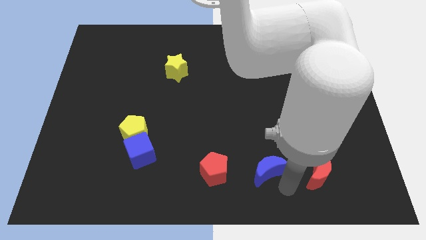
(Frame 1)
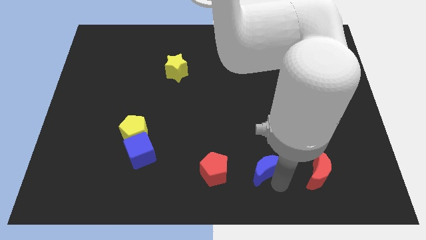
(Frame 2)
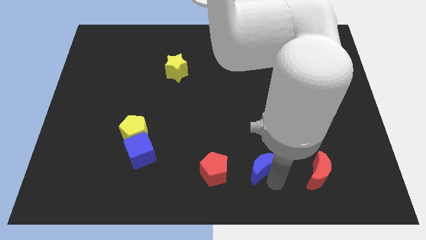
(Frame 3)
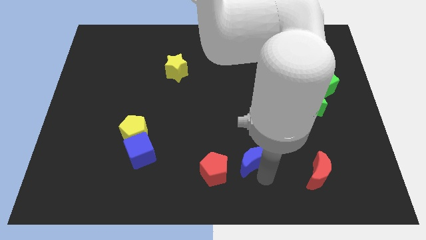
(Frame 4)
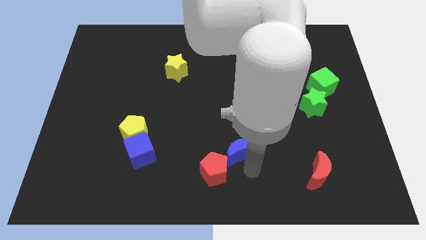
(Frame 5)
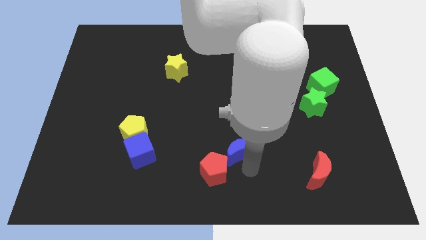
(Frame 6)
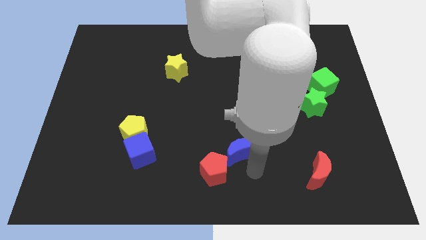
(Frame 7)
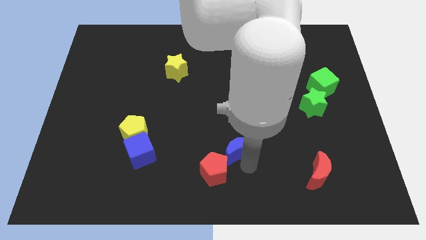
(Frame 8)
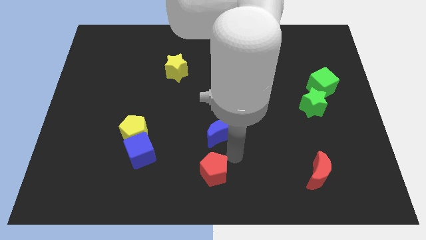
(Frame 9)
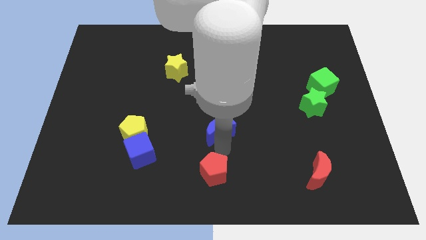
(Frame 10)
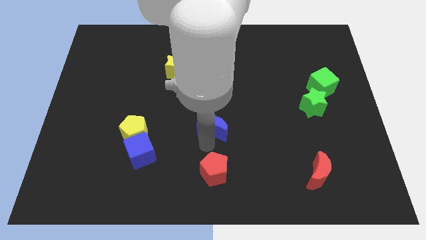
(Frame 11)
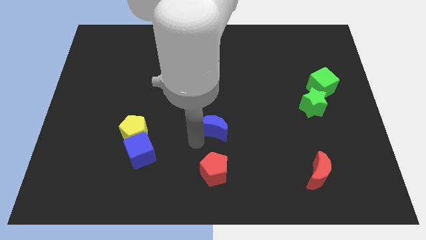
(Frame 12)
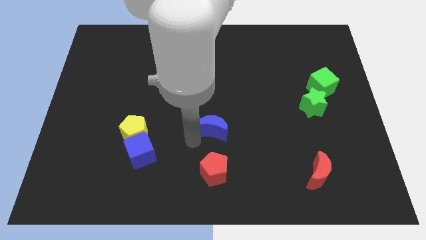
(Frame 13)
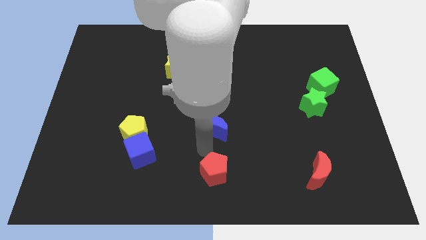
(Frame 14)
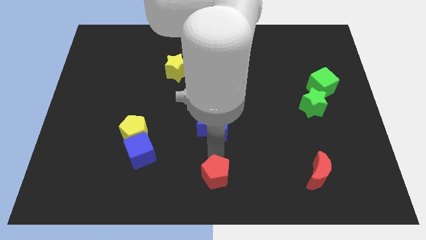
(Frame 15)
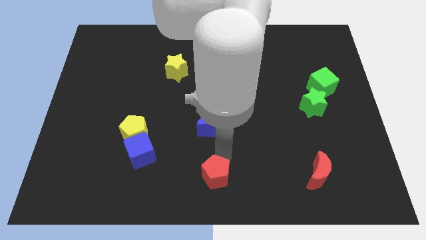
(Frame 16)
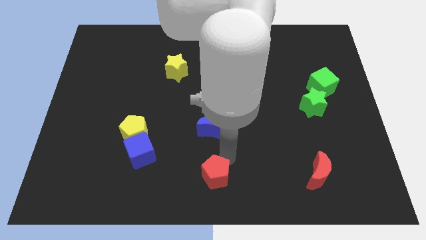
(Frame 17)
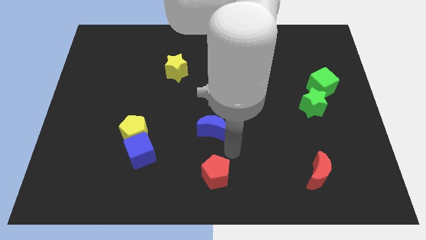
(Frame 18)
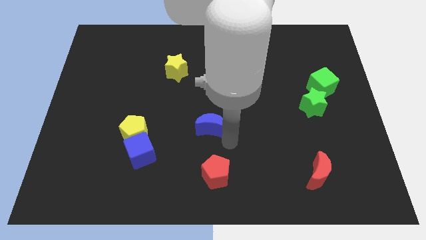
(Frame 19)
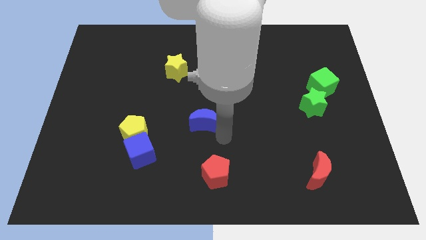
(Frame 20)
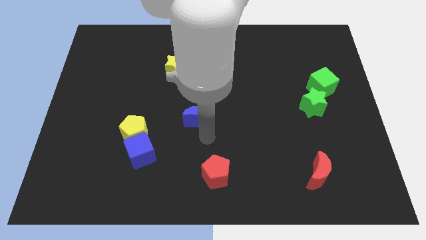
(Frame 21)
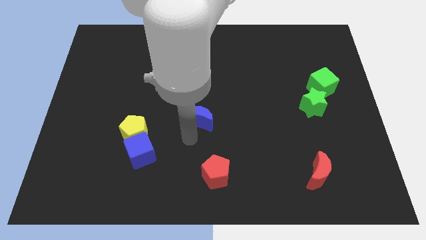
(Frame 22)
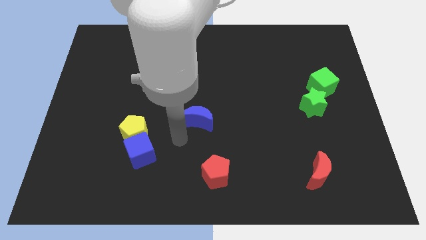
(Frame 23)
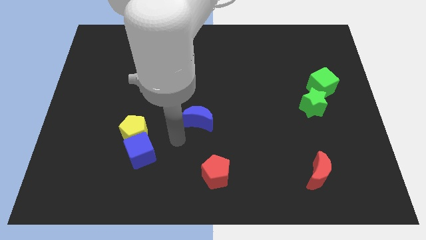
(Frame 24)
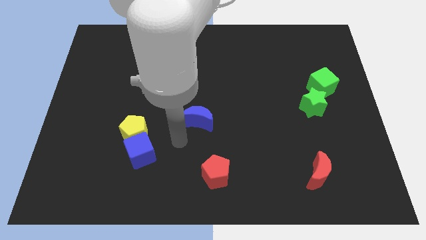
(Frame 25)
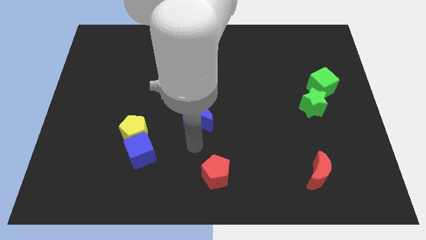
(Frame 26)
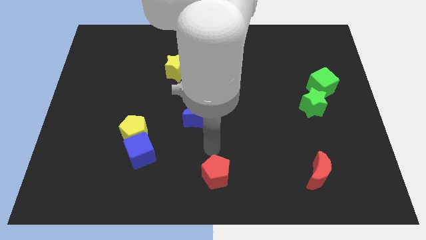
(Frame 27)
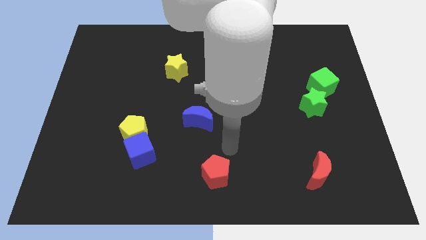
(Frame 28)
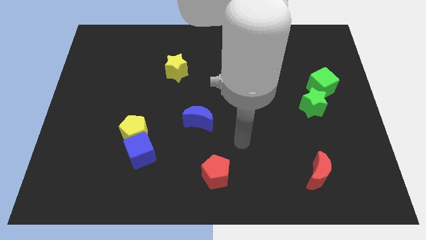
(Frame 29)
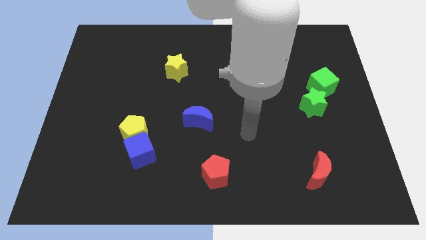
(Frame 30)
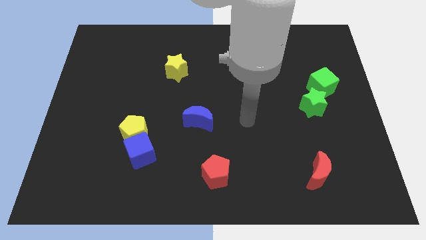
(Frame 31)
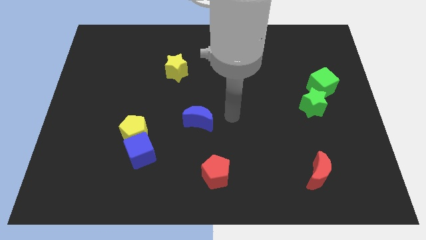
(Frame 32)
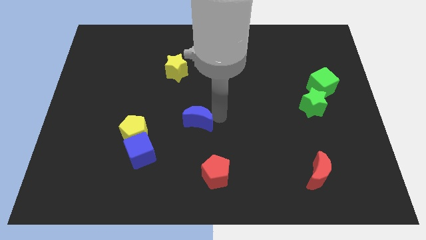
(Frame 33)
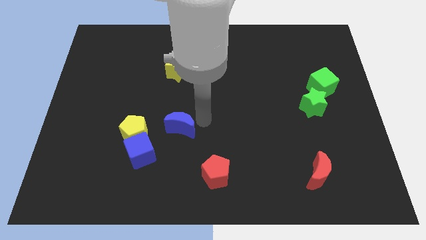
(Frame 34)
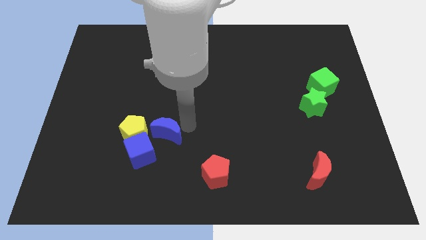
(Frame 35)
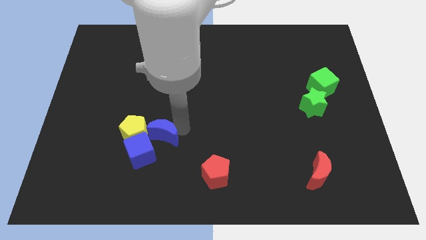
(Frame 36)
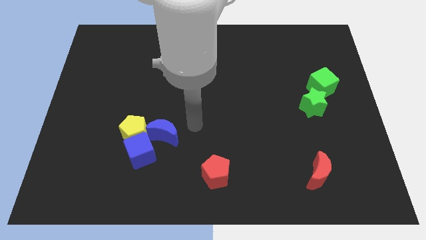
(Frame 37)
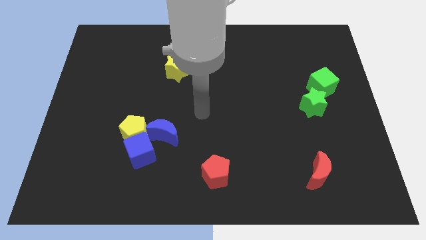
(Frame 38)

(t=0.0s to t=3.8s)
move the blue crescent to the right of the yellow pentagon

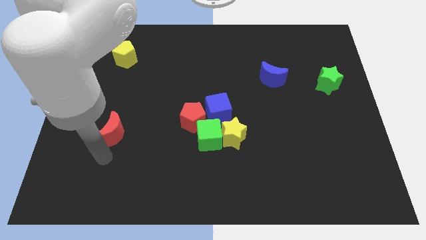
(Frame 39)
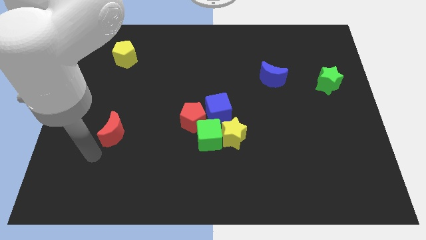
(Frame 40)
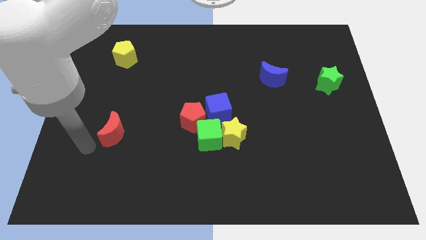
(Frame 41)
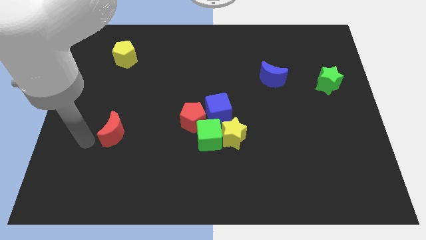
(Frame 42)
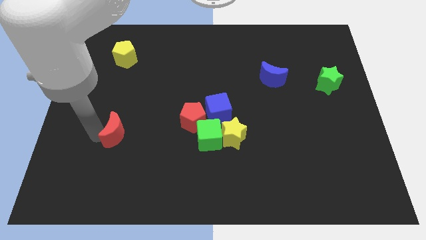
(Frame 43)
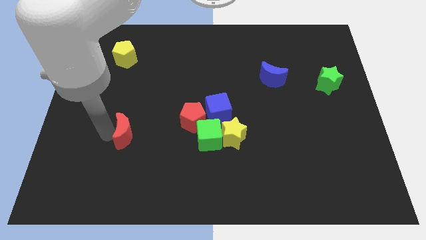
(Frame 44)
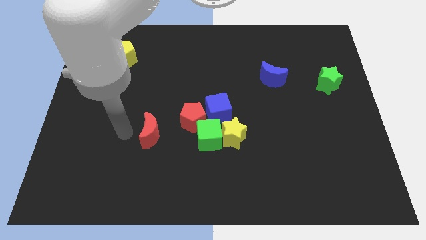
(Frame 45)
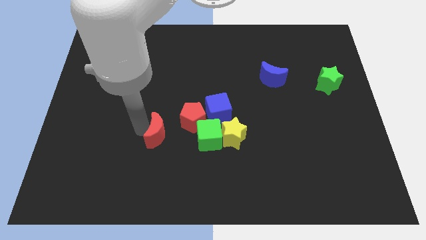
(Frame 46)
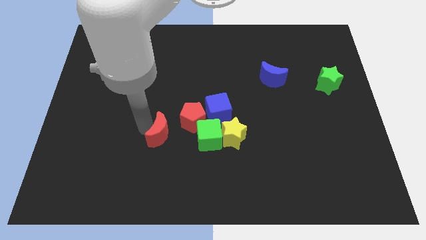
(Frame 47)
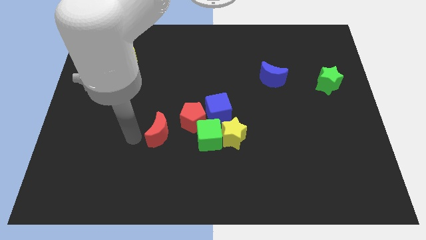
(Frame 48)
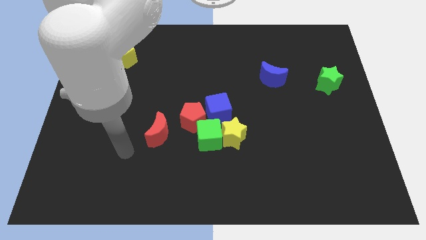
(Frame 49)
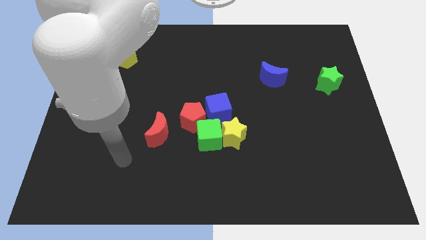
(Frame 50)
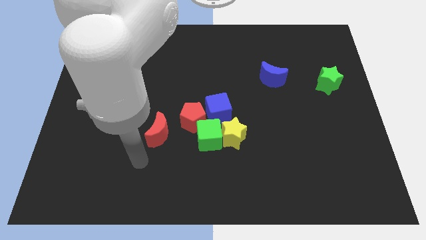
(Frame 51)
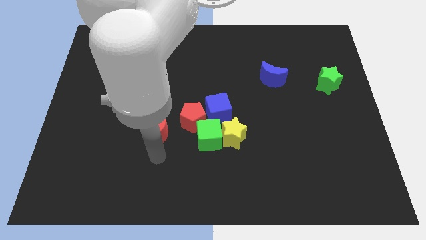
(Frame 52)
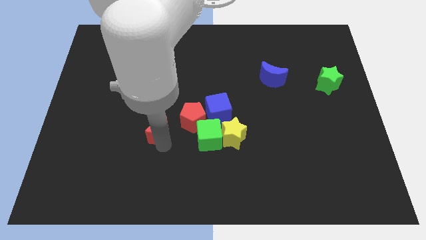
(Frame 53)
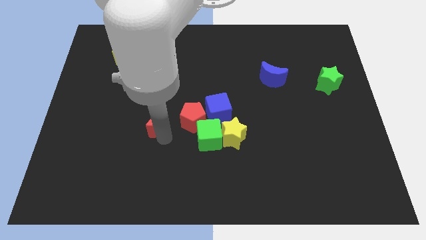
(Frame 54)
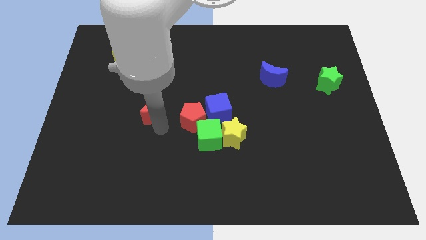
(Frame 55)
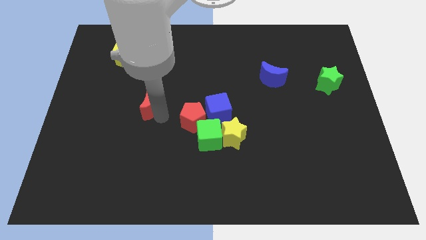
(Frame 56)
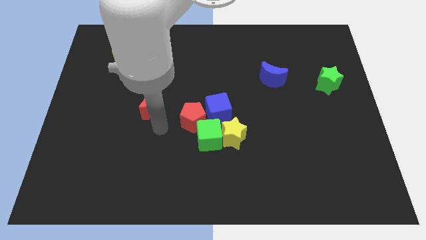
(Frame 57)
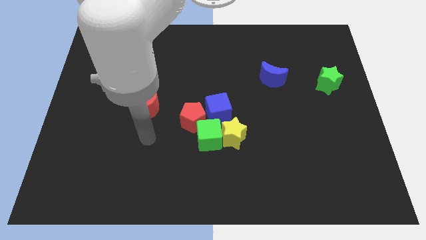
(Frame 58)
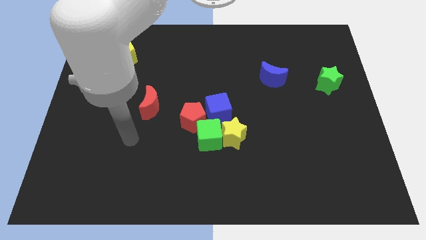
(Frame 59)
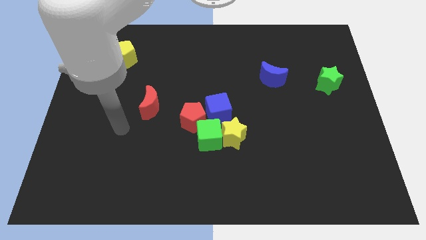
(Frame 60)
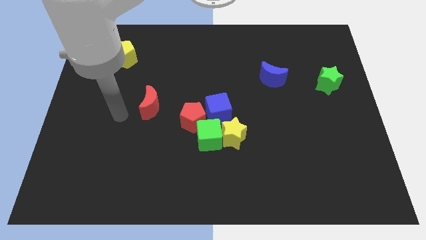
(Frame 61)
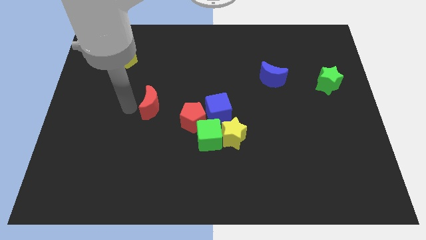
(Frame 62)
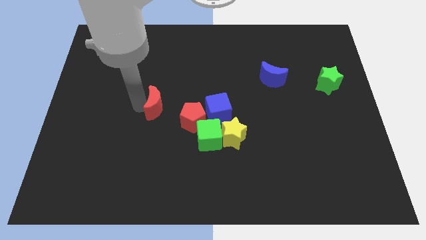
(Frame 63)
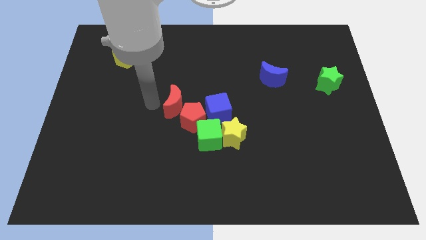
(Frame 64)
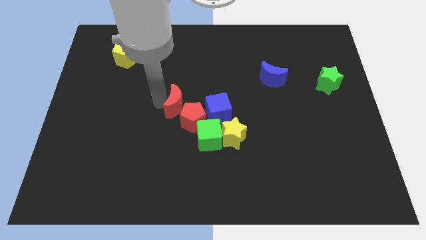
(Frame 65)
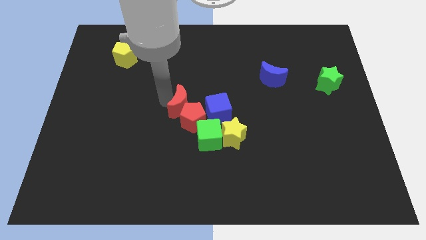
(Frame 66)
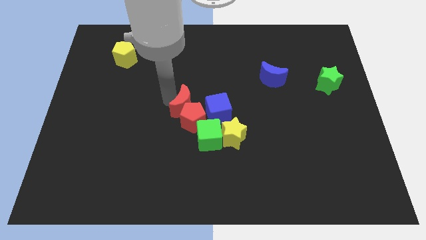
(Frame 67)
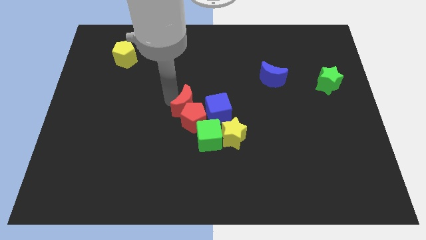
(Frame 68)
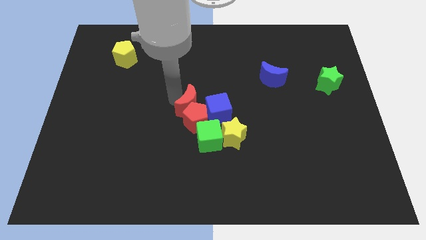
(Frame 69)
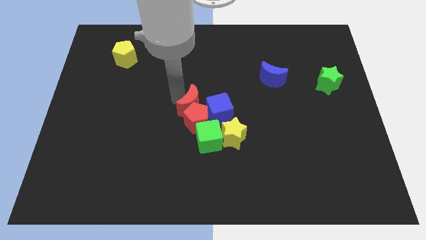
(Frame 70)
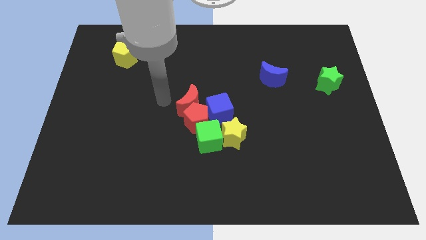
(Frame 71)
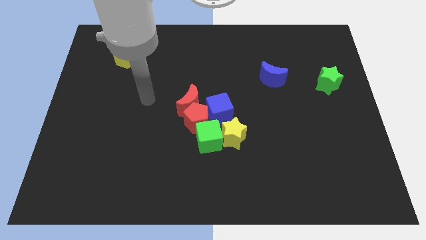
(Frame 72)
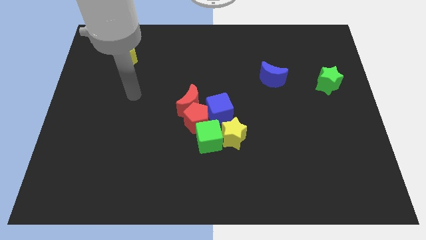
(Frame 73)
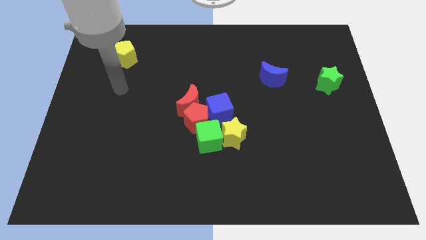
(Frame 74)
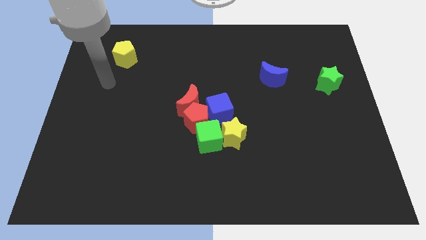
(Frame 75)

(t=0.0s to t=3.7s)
push the red crescent into the red pentagon

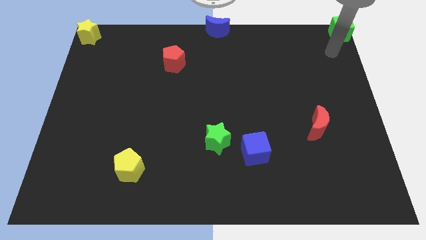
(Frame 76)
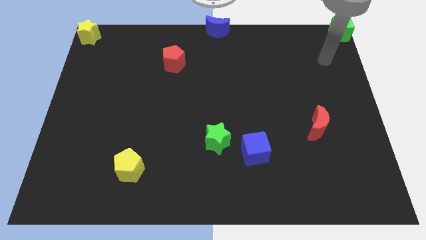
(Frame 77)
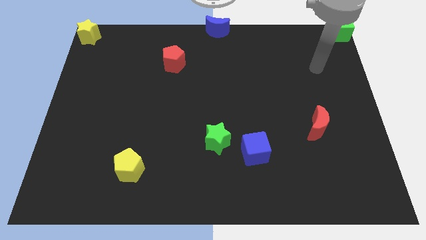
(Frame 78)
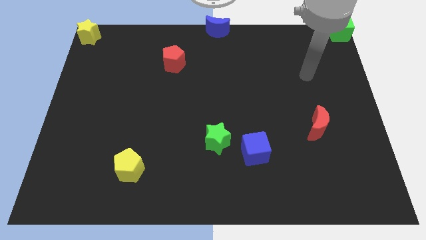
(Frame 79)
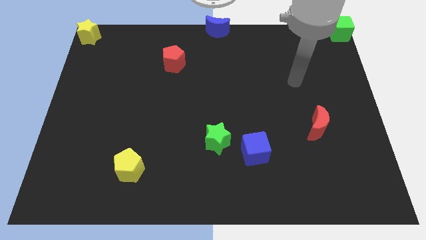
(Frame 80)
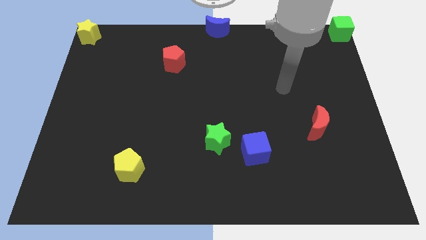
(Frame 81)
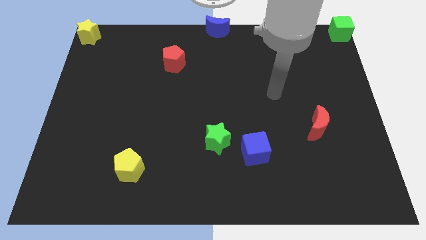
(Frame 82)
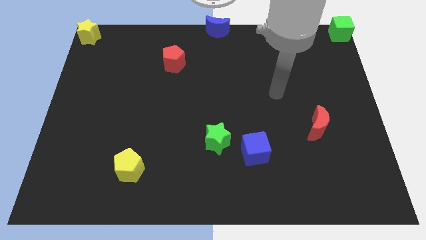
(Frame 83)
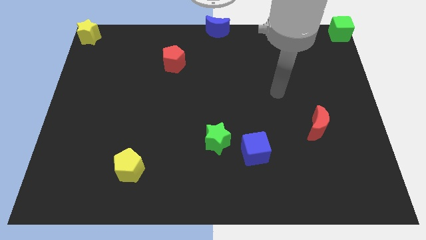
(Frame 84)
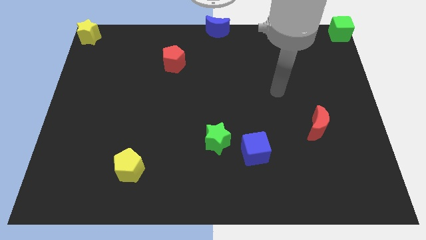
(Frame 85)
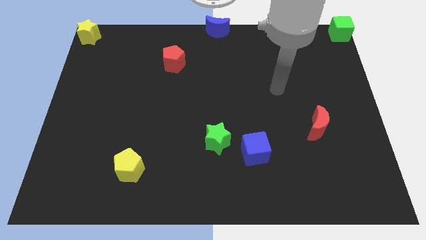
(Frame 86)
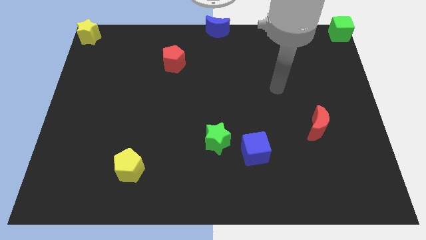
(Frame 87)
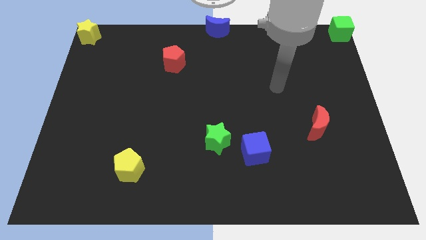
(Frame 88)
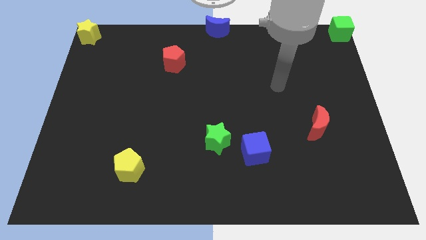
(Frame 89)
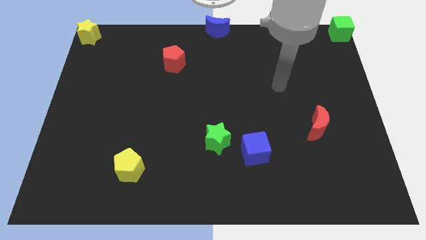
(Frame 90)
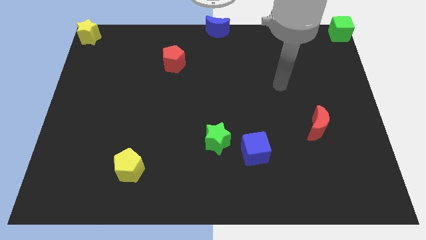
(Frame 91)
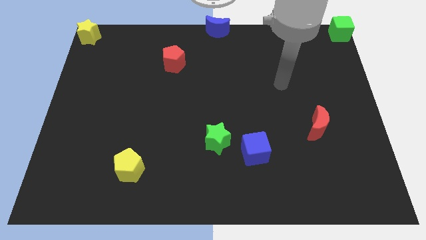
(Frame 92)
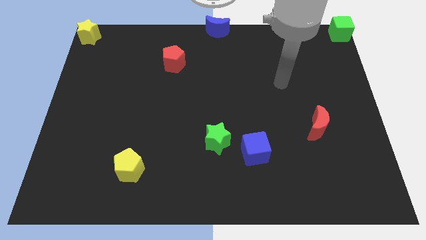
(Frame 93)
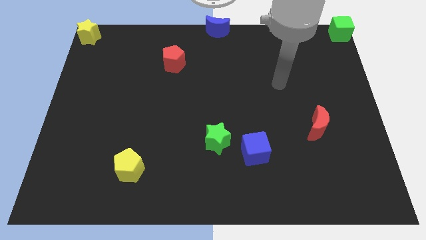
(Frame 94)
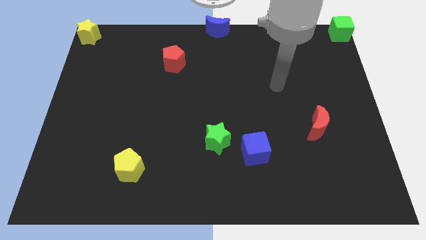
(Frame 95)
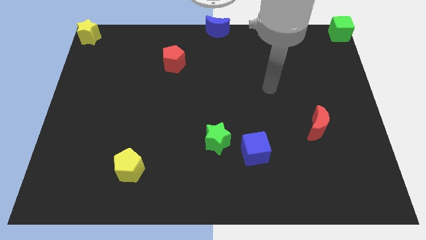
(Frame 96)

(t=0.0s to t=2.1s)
move your arm away from the green cube
